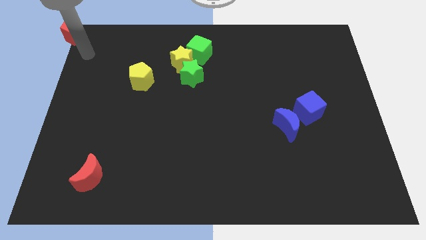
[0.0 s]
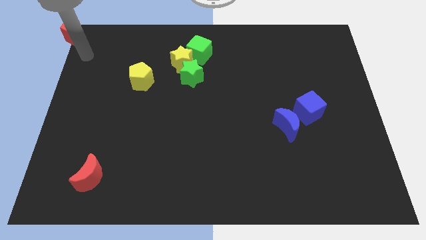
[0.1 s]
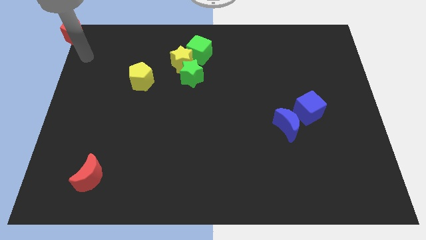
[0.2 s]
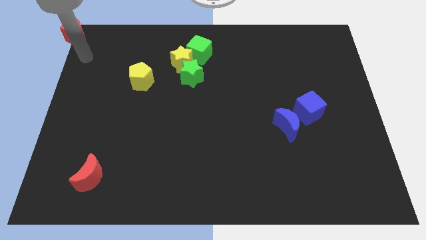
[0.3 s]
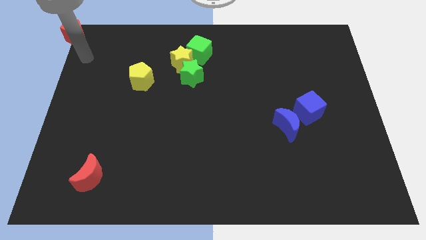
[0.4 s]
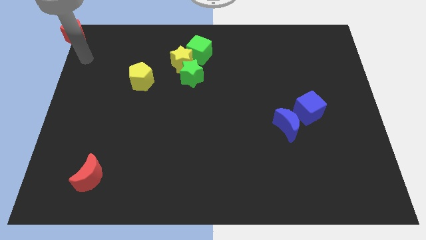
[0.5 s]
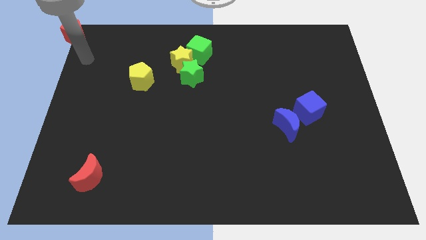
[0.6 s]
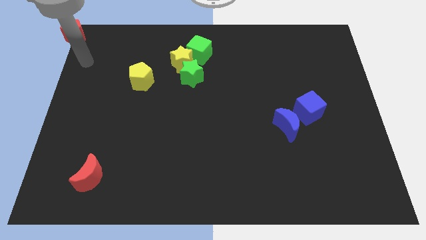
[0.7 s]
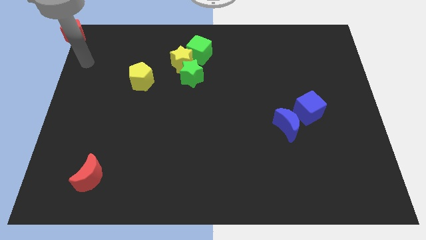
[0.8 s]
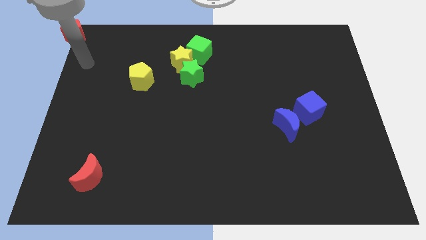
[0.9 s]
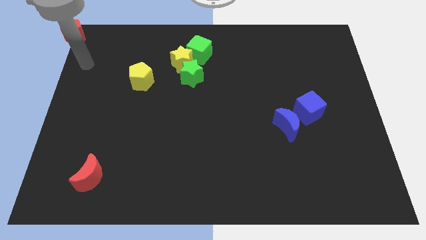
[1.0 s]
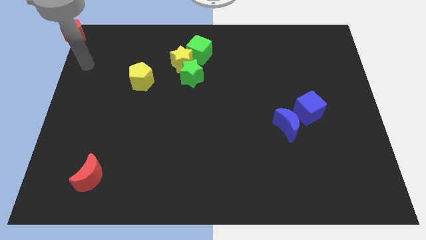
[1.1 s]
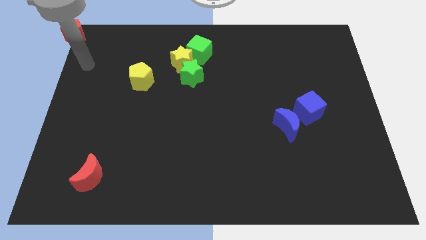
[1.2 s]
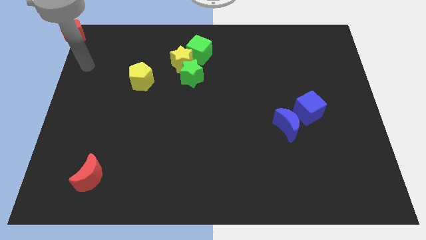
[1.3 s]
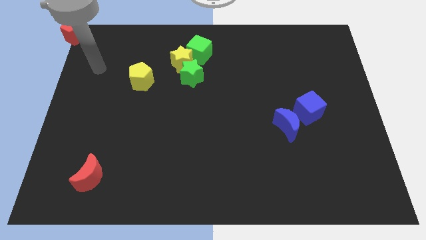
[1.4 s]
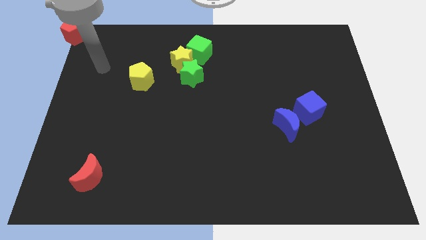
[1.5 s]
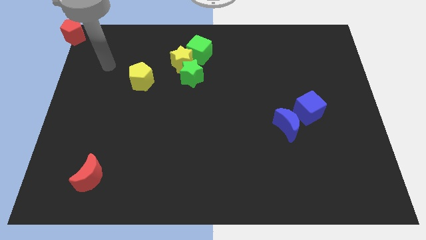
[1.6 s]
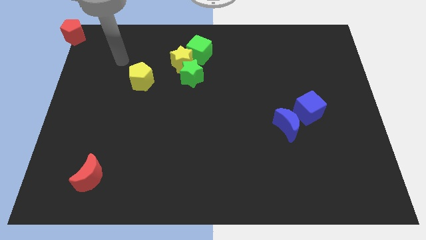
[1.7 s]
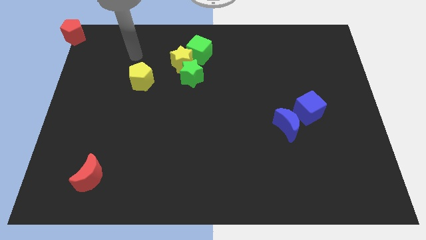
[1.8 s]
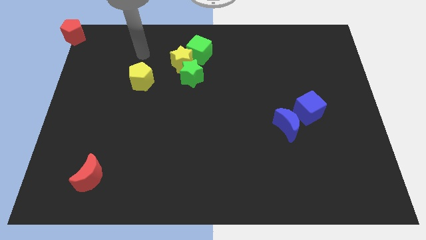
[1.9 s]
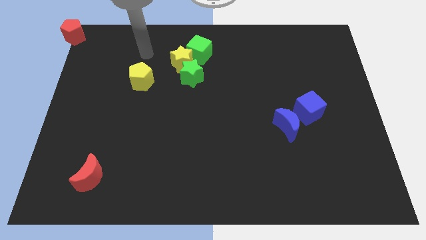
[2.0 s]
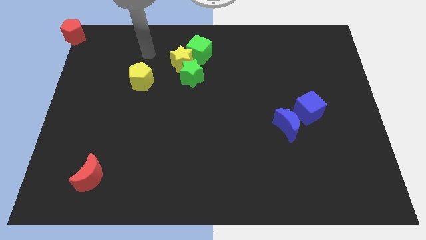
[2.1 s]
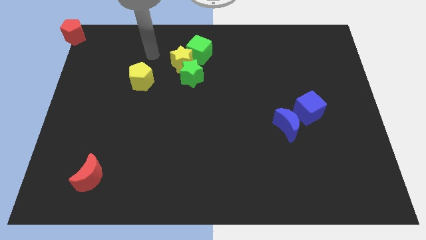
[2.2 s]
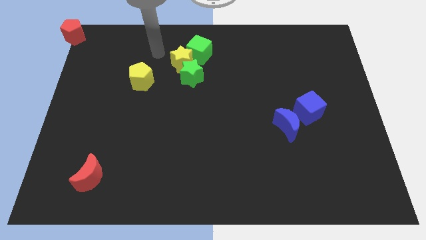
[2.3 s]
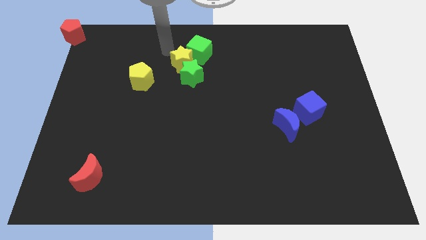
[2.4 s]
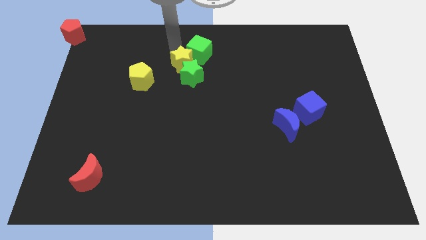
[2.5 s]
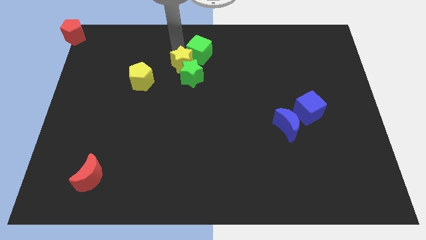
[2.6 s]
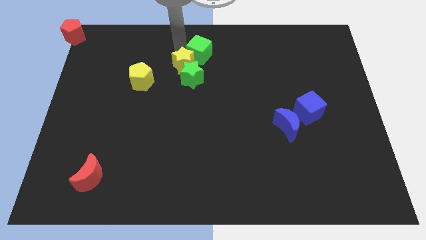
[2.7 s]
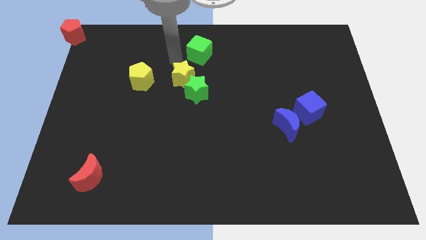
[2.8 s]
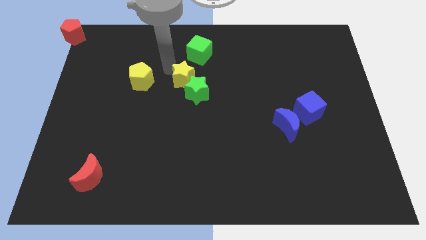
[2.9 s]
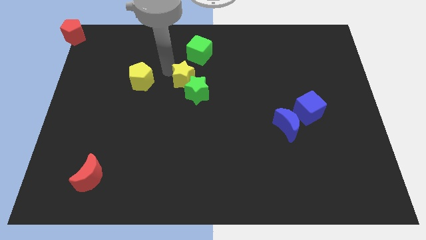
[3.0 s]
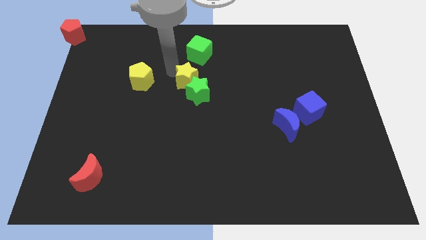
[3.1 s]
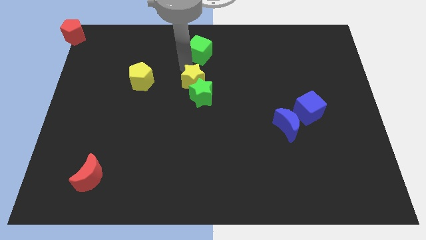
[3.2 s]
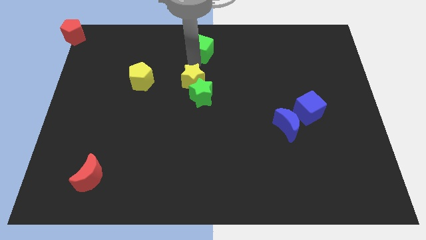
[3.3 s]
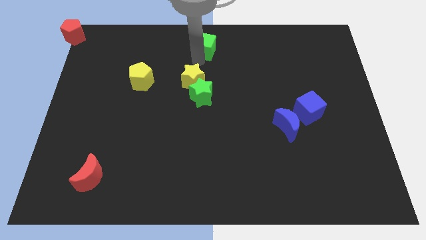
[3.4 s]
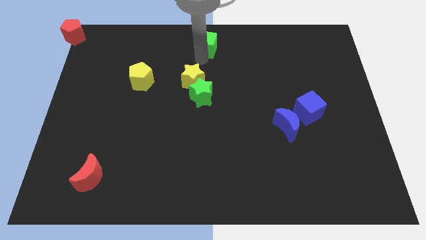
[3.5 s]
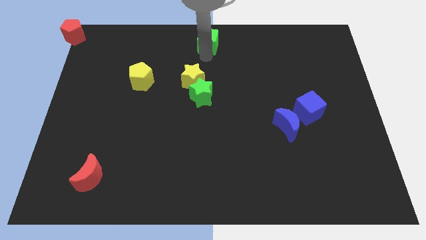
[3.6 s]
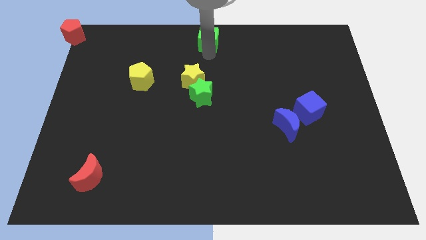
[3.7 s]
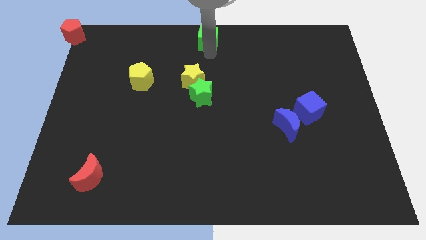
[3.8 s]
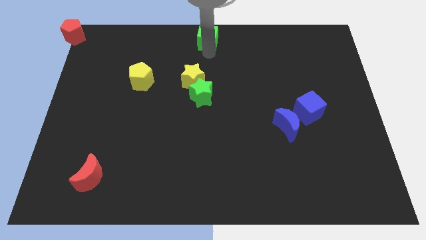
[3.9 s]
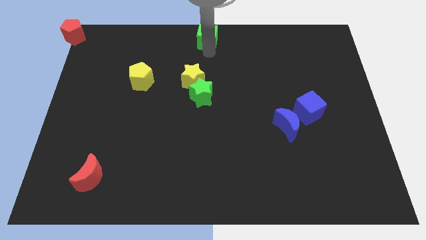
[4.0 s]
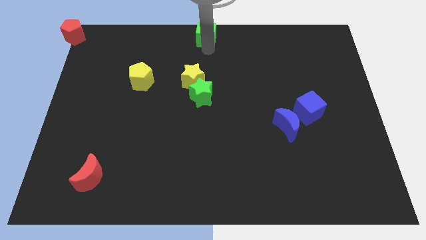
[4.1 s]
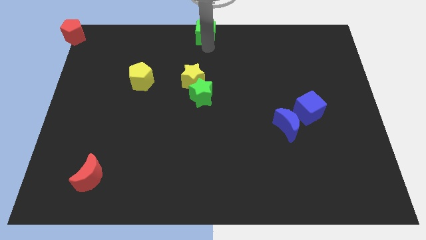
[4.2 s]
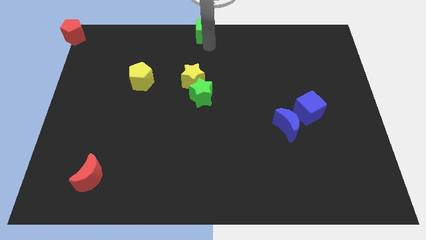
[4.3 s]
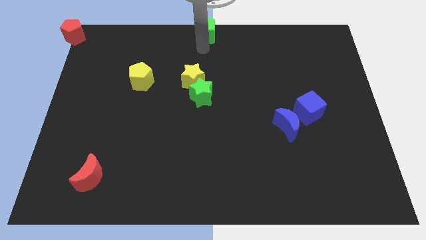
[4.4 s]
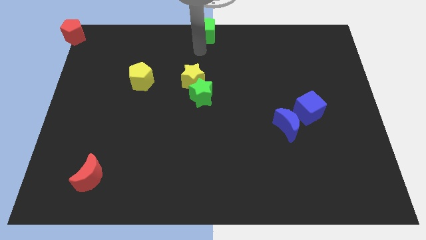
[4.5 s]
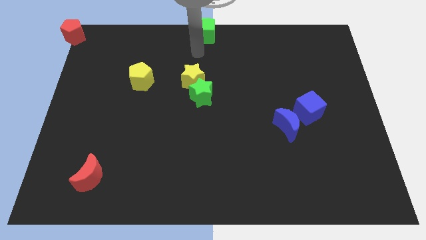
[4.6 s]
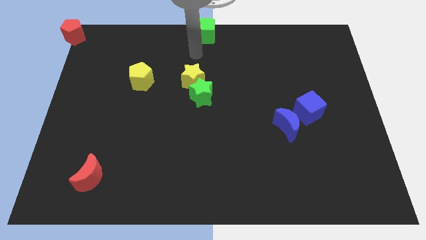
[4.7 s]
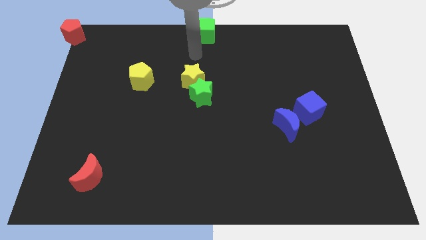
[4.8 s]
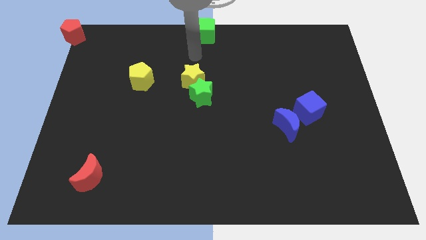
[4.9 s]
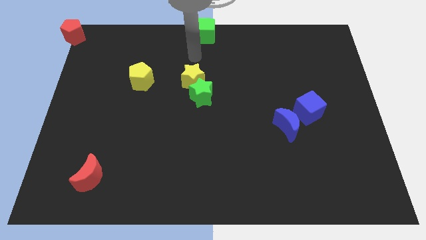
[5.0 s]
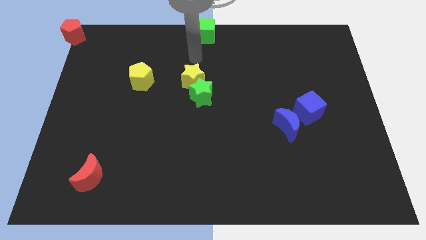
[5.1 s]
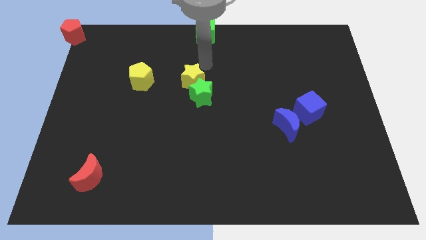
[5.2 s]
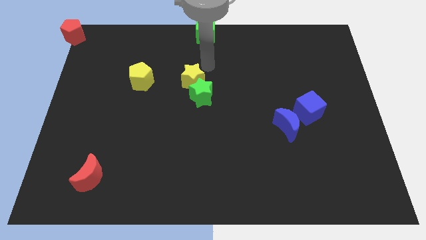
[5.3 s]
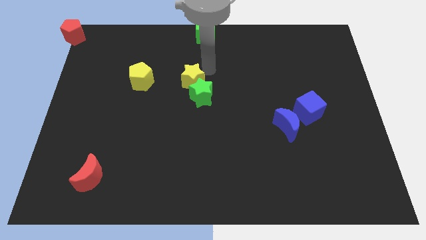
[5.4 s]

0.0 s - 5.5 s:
place the green cube at the top center of the board

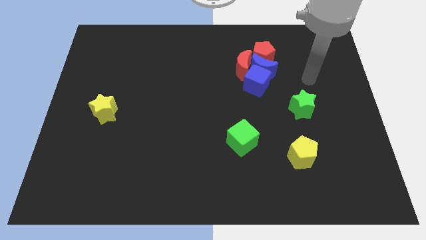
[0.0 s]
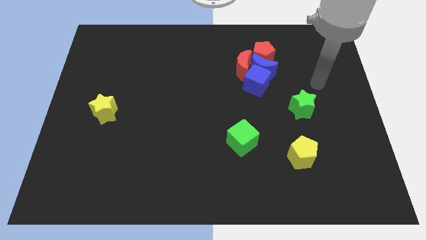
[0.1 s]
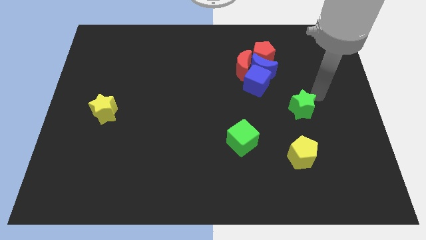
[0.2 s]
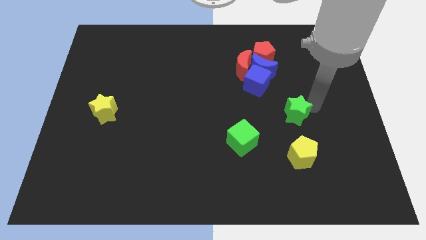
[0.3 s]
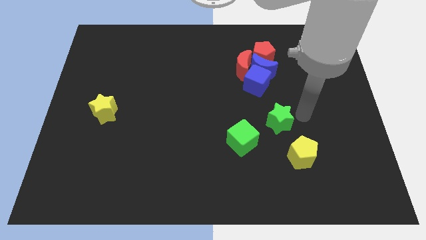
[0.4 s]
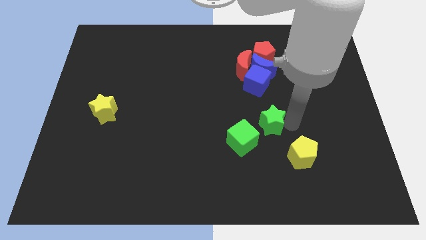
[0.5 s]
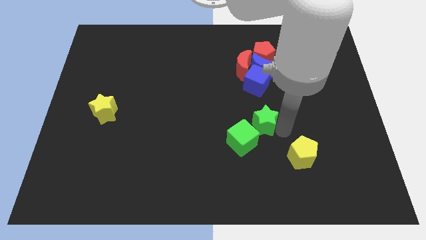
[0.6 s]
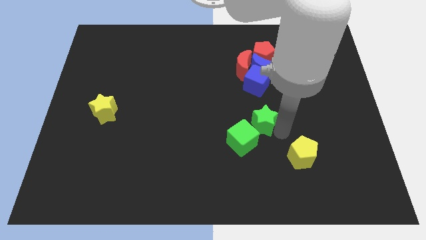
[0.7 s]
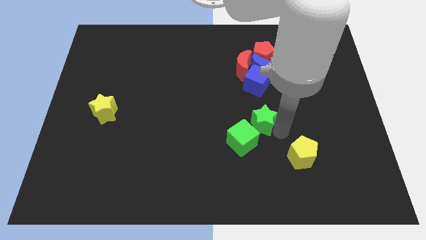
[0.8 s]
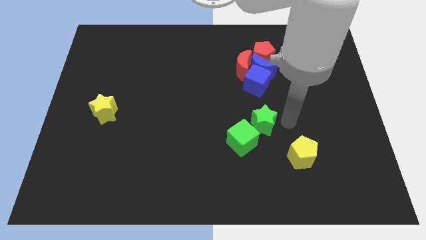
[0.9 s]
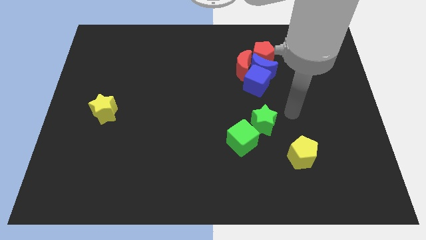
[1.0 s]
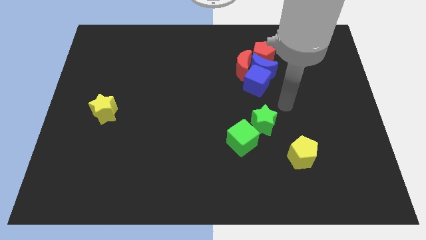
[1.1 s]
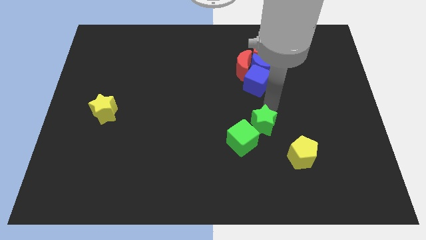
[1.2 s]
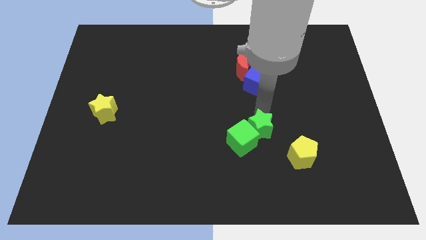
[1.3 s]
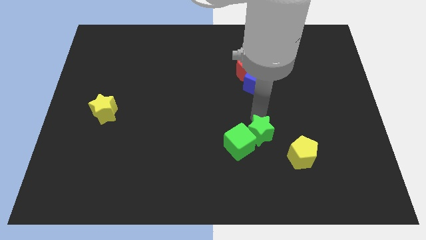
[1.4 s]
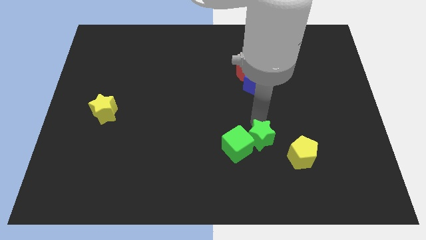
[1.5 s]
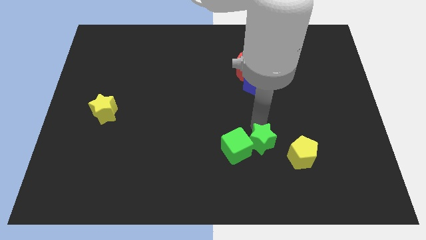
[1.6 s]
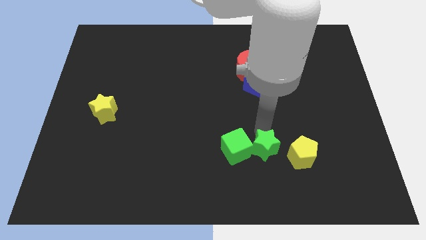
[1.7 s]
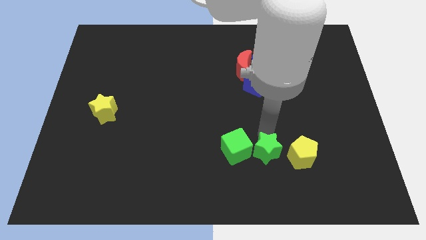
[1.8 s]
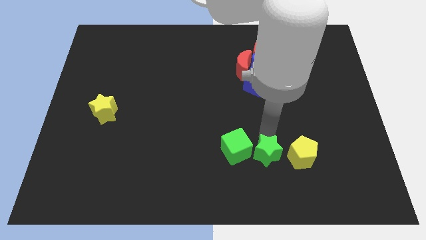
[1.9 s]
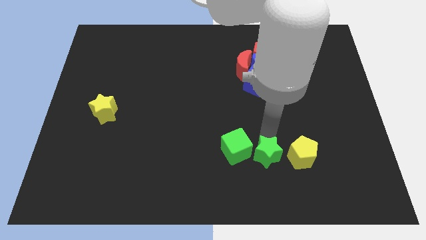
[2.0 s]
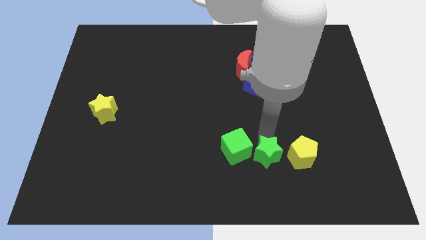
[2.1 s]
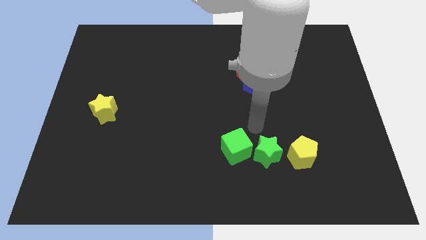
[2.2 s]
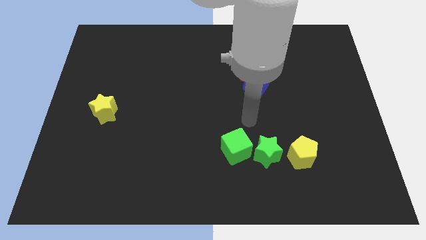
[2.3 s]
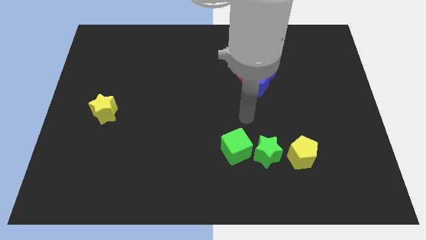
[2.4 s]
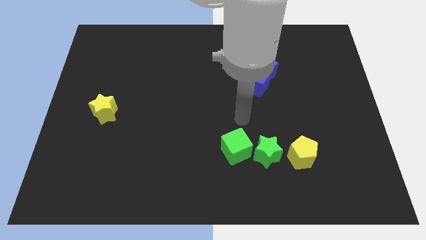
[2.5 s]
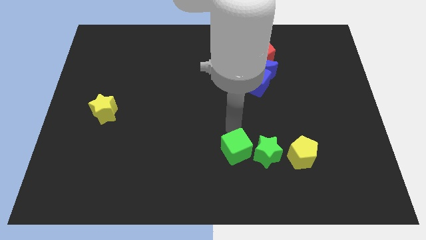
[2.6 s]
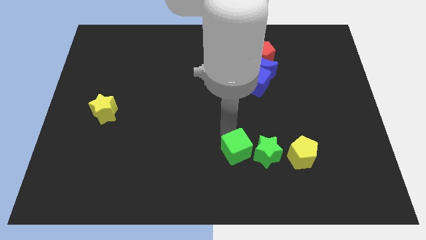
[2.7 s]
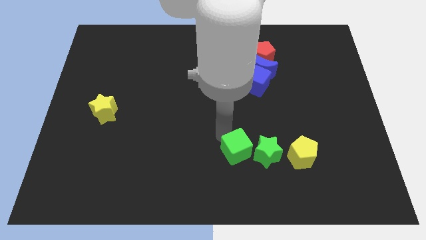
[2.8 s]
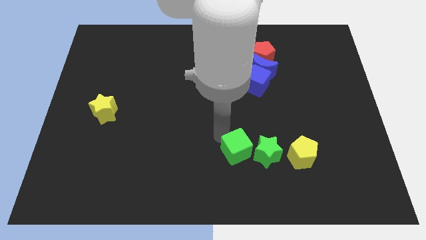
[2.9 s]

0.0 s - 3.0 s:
place green star in between the yellow pentagon and green cube

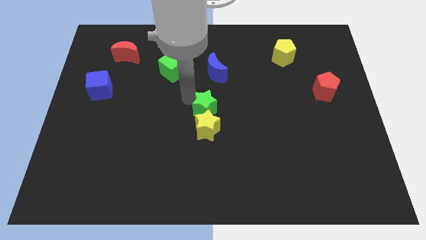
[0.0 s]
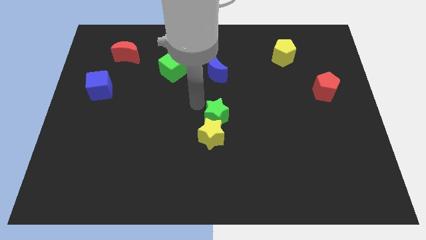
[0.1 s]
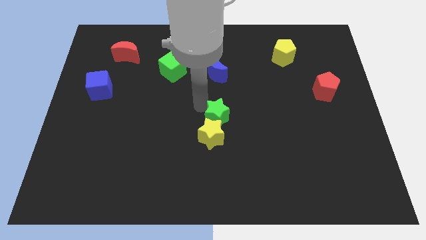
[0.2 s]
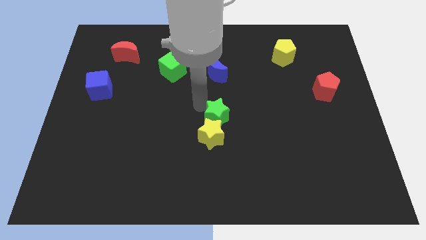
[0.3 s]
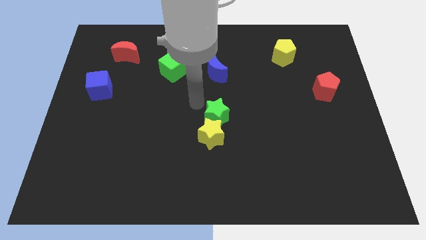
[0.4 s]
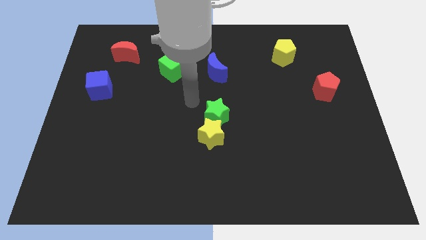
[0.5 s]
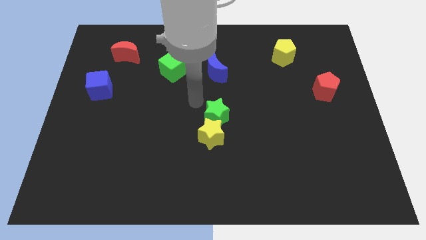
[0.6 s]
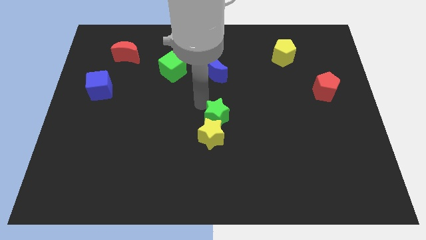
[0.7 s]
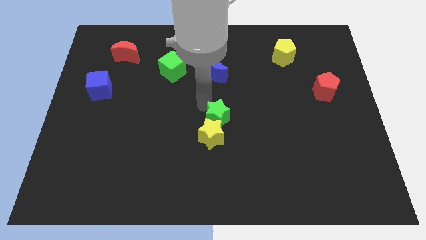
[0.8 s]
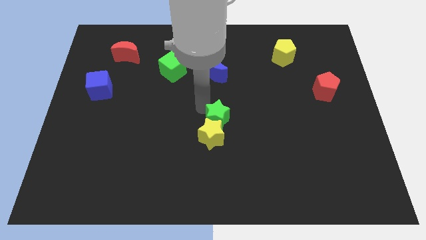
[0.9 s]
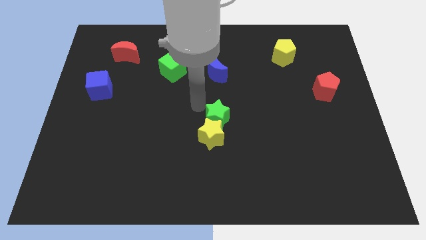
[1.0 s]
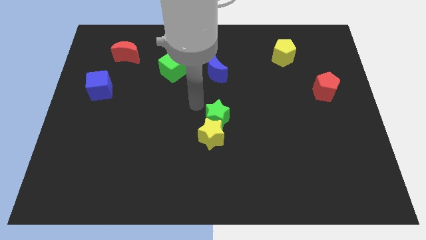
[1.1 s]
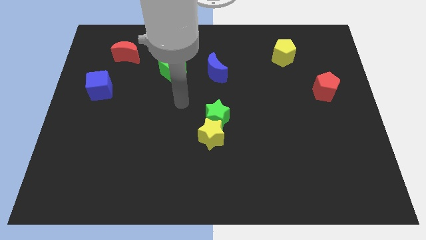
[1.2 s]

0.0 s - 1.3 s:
push the green star into the yellow star towards the bottom
